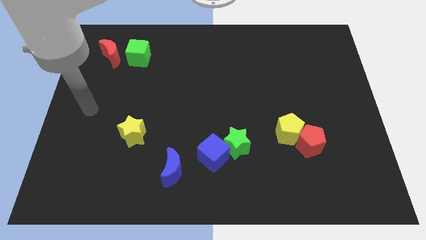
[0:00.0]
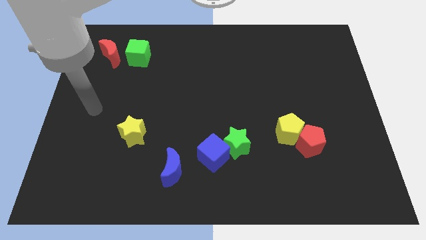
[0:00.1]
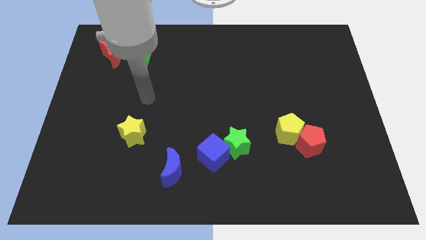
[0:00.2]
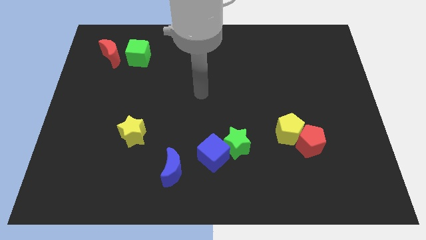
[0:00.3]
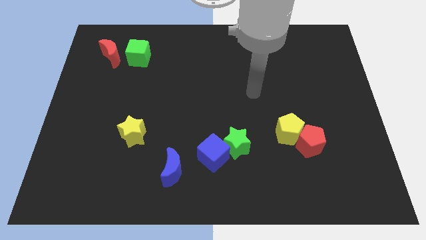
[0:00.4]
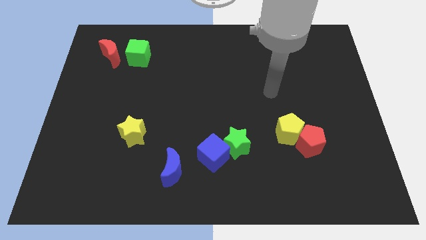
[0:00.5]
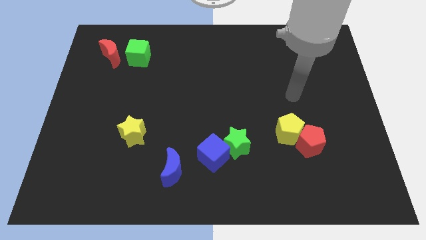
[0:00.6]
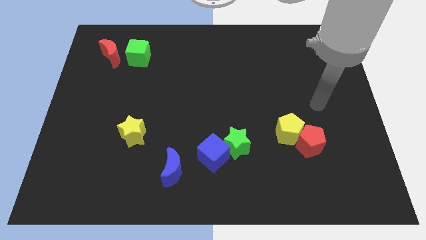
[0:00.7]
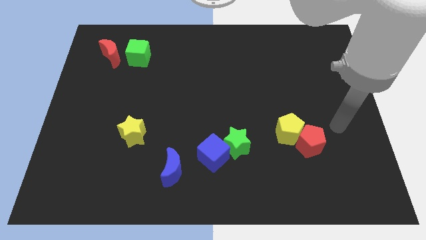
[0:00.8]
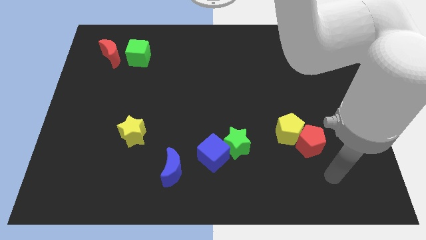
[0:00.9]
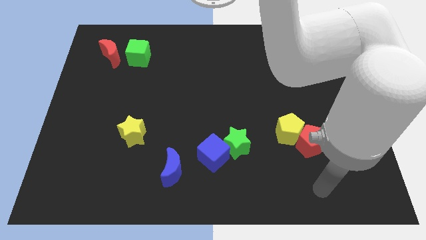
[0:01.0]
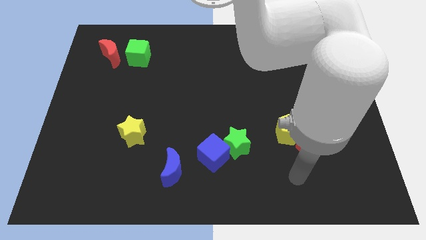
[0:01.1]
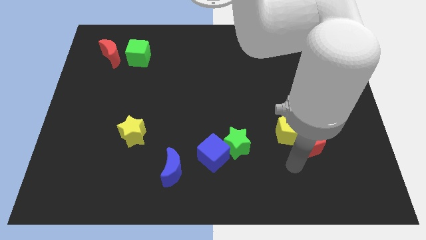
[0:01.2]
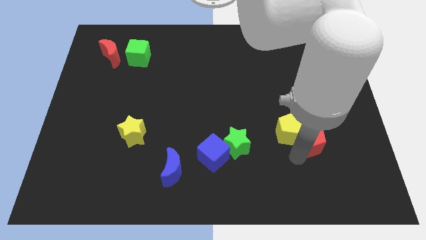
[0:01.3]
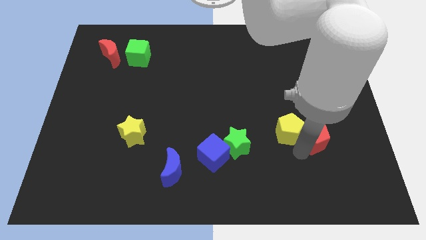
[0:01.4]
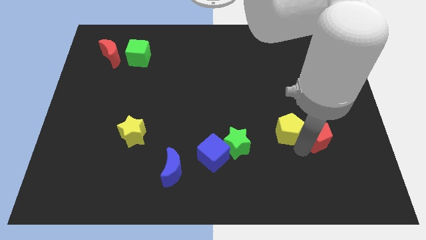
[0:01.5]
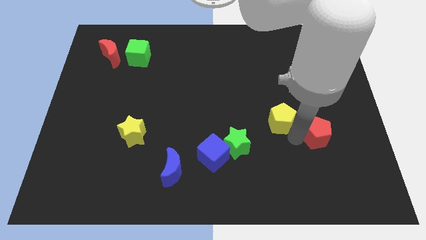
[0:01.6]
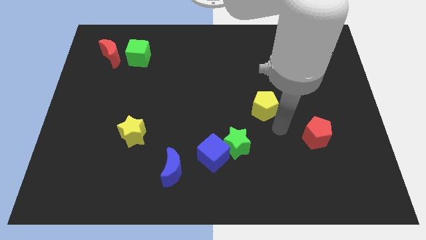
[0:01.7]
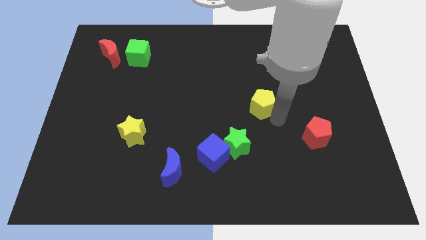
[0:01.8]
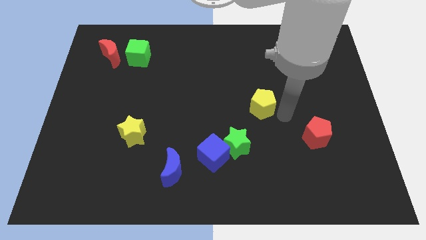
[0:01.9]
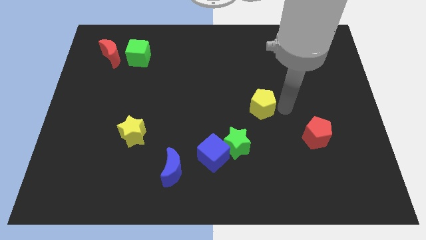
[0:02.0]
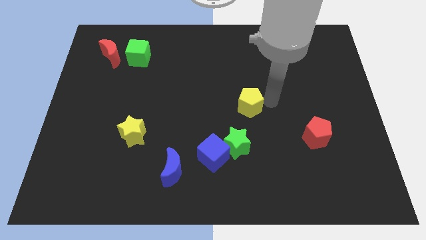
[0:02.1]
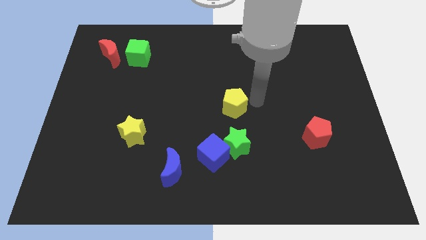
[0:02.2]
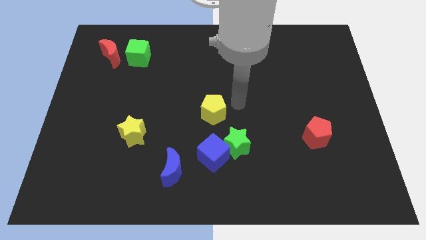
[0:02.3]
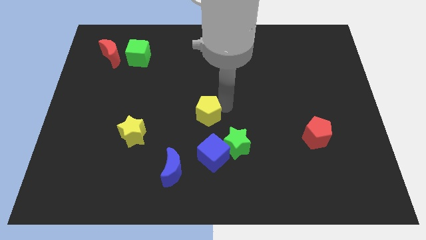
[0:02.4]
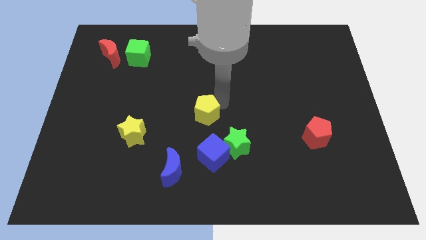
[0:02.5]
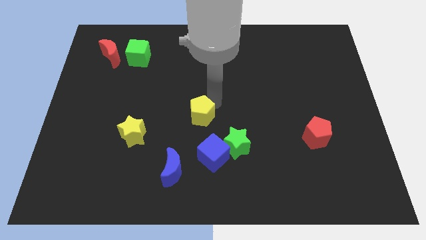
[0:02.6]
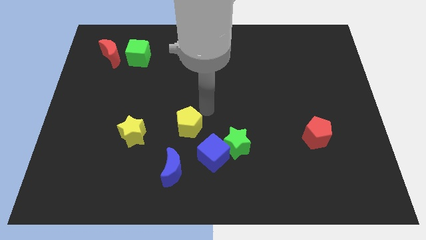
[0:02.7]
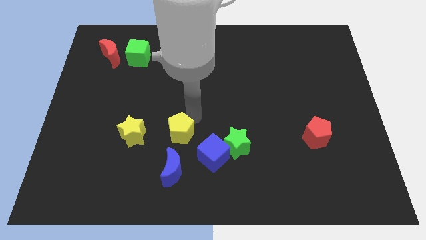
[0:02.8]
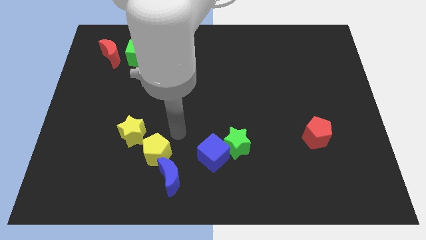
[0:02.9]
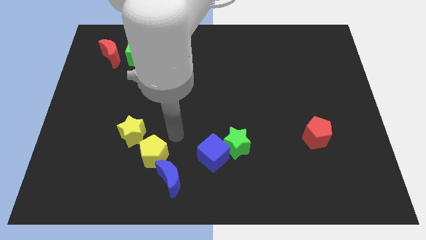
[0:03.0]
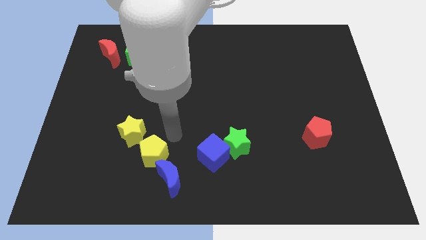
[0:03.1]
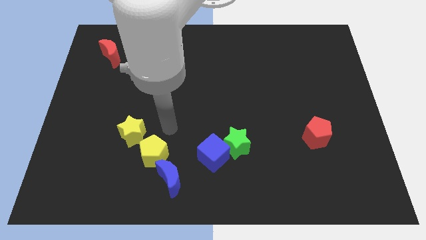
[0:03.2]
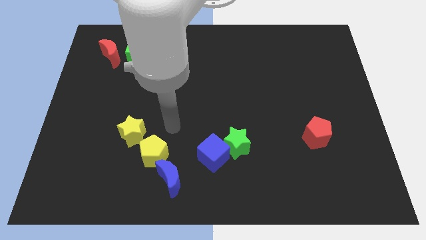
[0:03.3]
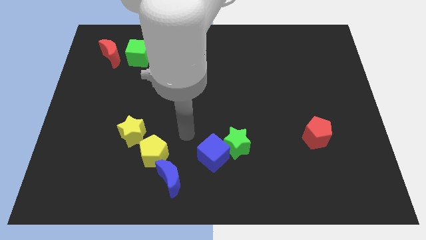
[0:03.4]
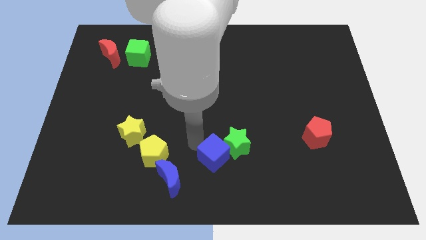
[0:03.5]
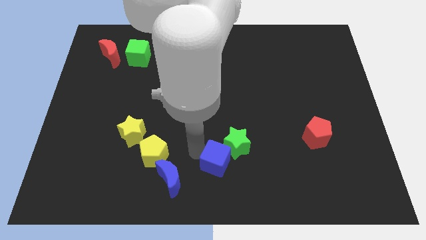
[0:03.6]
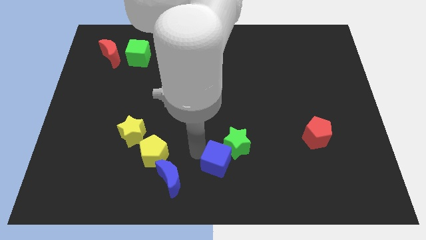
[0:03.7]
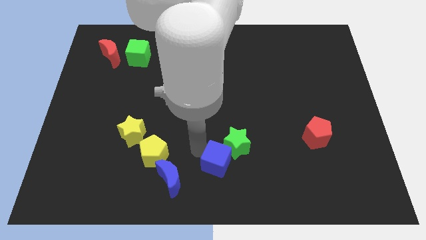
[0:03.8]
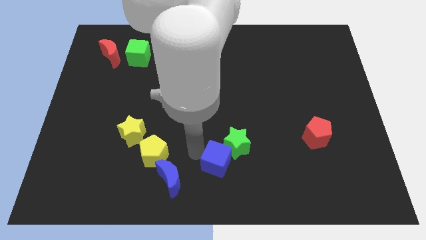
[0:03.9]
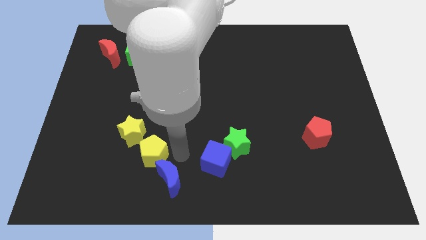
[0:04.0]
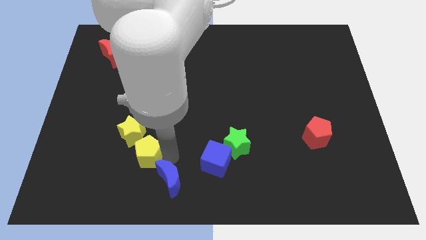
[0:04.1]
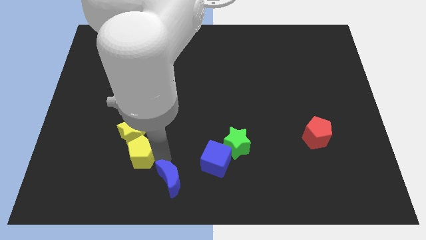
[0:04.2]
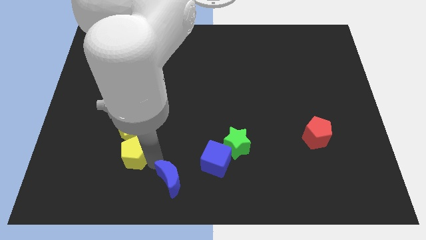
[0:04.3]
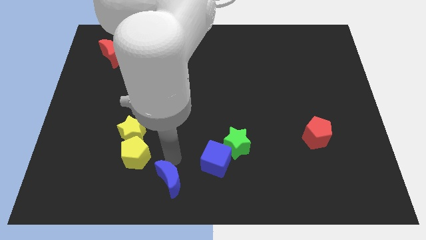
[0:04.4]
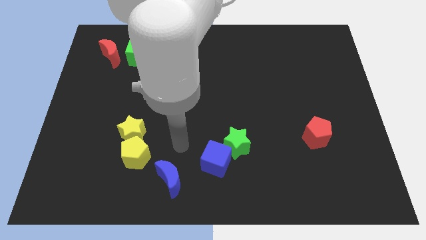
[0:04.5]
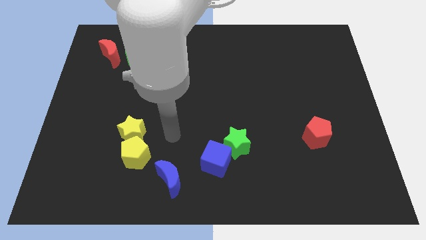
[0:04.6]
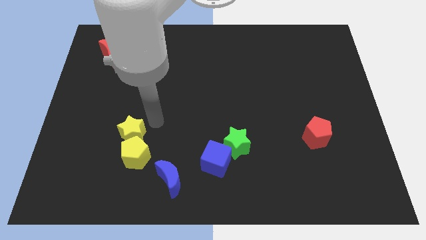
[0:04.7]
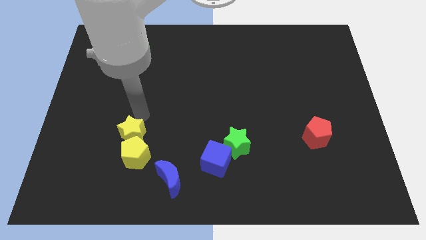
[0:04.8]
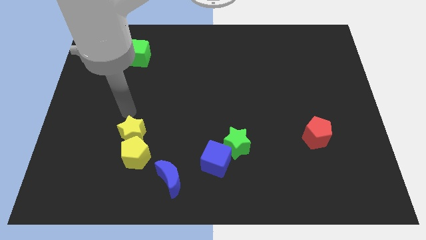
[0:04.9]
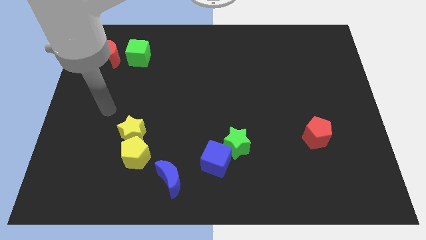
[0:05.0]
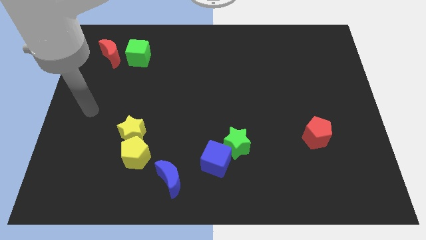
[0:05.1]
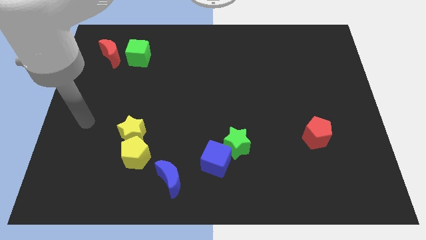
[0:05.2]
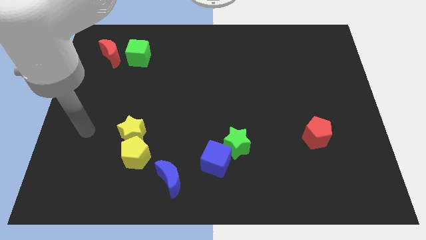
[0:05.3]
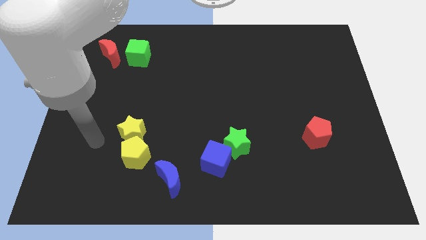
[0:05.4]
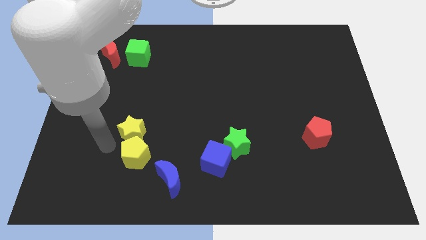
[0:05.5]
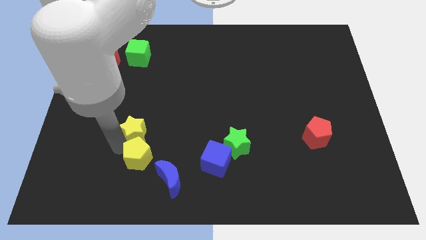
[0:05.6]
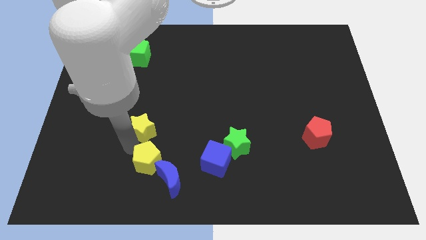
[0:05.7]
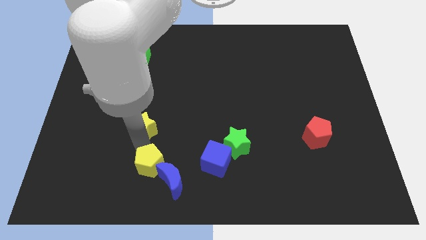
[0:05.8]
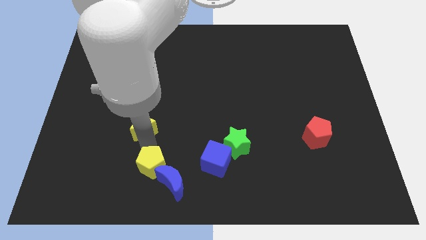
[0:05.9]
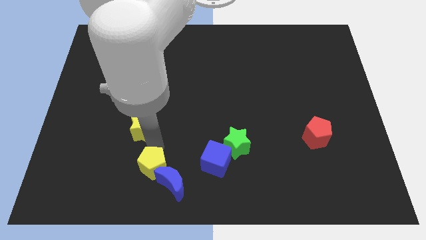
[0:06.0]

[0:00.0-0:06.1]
slide the yellow pentagon towards the blue moon

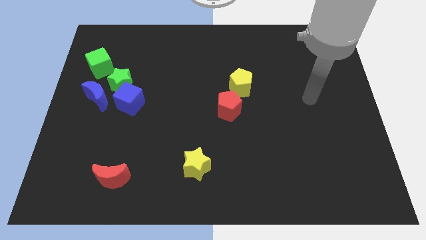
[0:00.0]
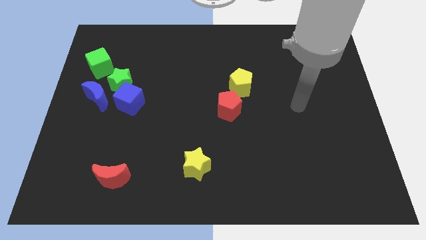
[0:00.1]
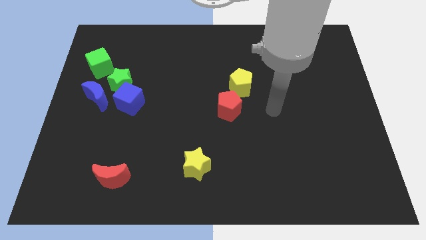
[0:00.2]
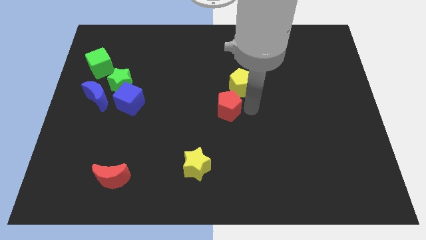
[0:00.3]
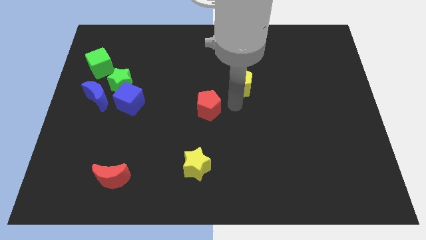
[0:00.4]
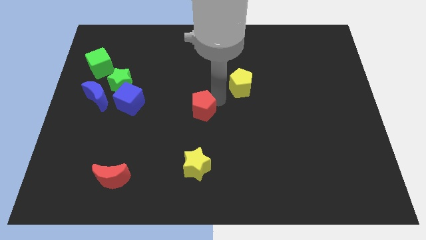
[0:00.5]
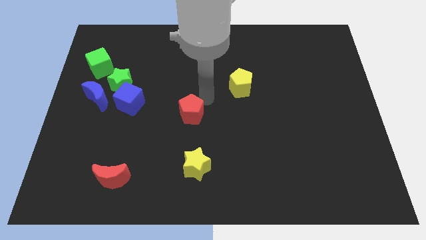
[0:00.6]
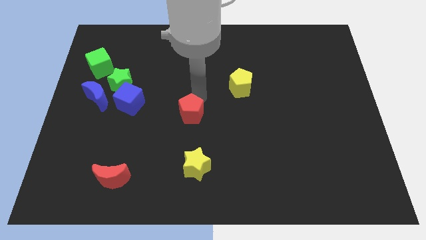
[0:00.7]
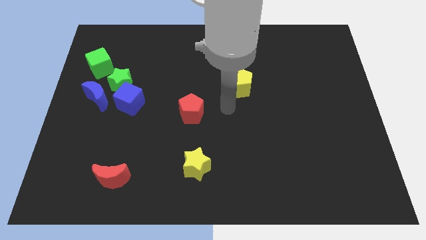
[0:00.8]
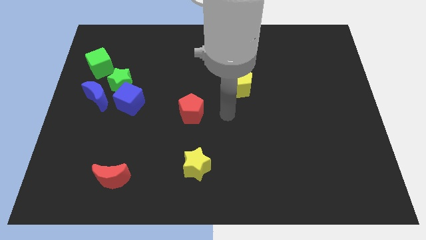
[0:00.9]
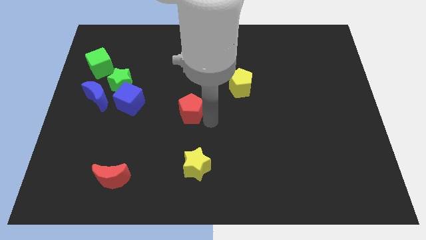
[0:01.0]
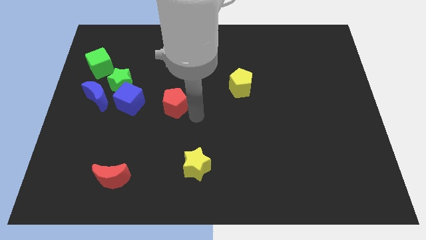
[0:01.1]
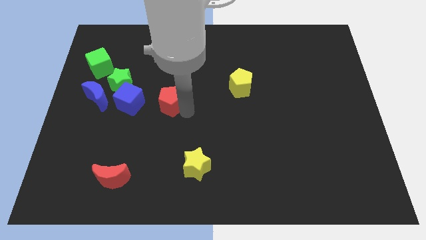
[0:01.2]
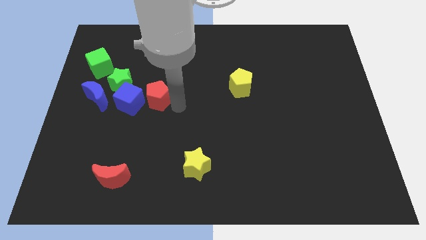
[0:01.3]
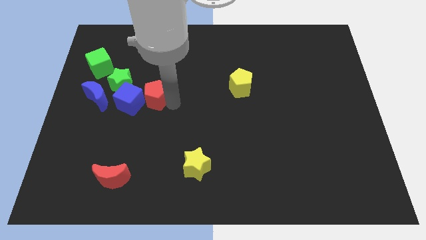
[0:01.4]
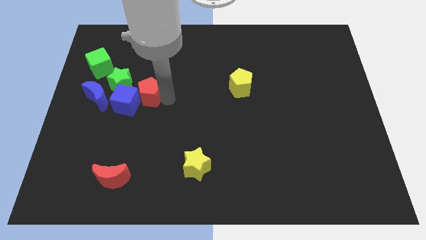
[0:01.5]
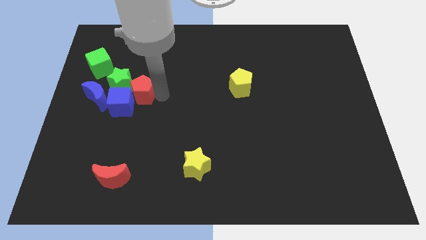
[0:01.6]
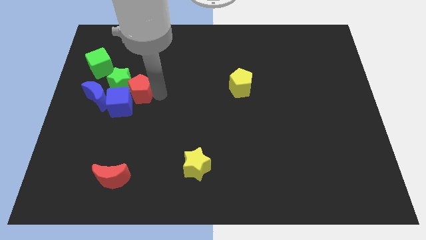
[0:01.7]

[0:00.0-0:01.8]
put the red pentagon towards the blue cube

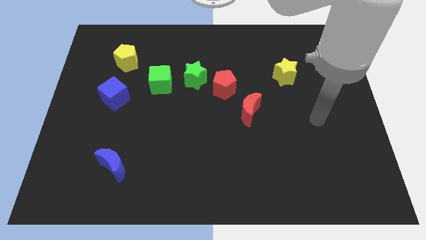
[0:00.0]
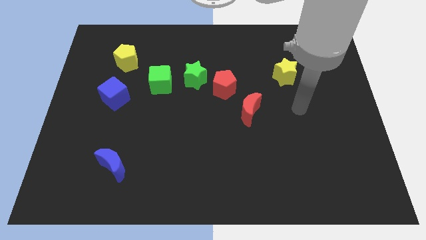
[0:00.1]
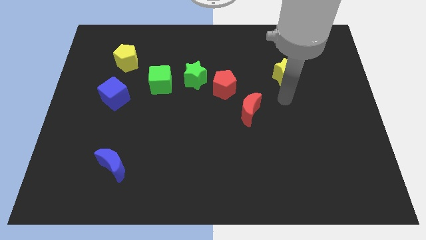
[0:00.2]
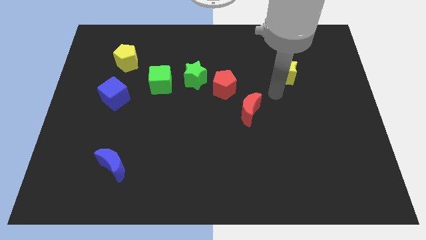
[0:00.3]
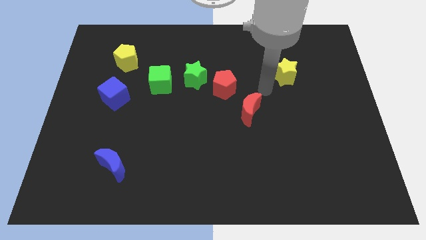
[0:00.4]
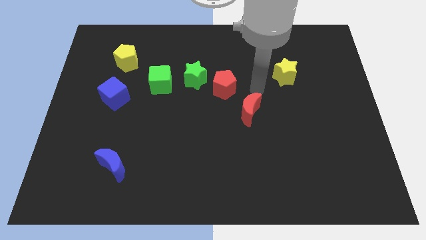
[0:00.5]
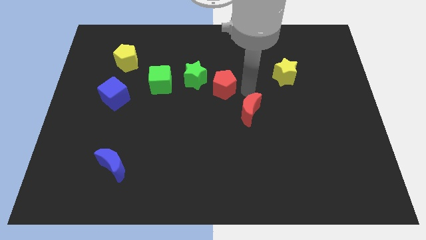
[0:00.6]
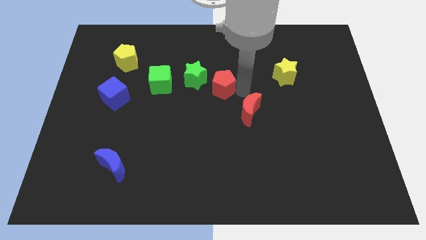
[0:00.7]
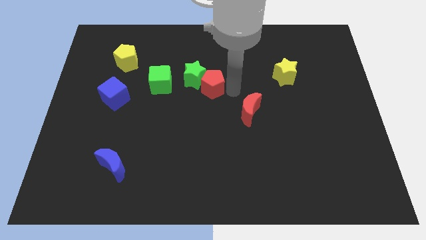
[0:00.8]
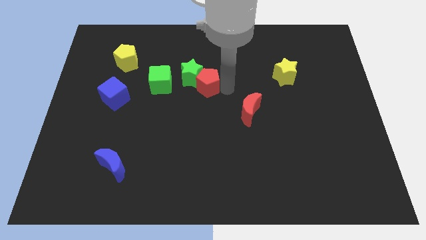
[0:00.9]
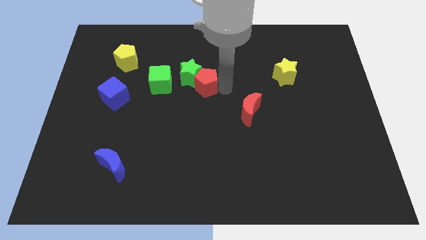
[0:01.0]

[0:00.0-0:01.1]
slide the red pentagon towards the green star
